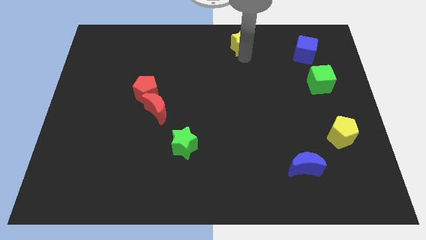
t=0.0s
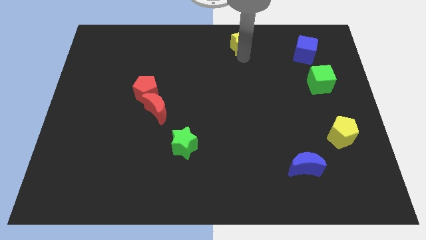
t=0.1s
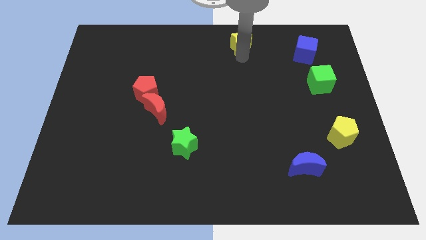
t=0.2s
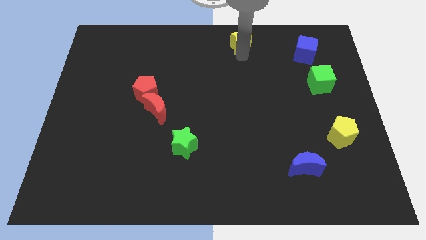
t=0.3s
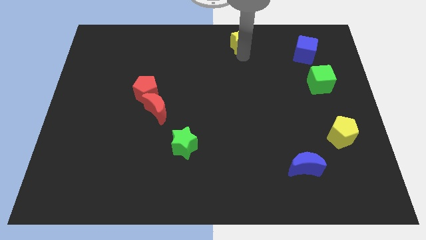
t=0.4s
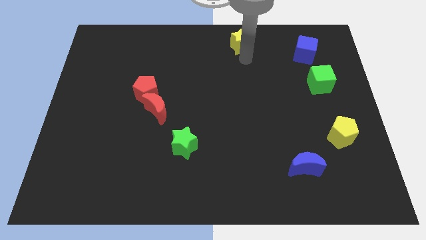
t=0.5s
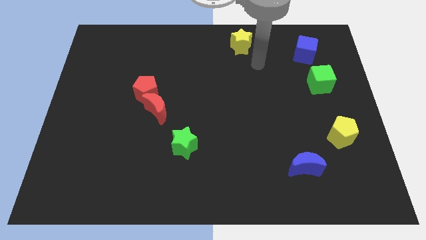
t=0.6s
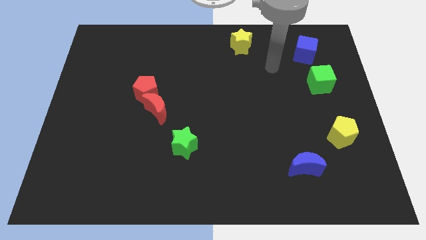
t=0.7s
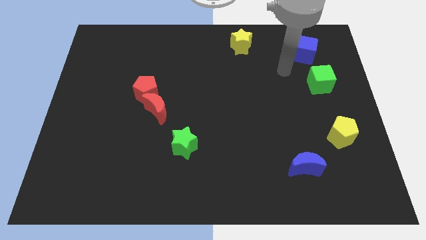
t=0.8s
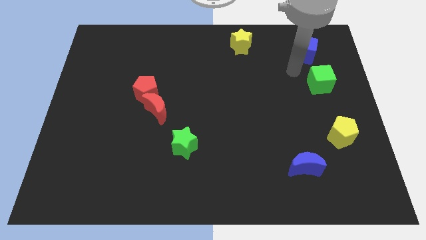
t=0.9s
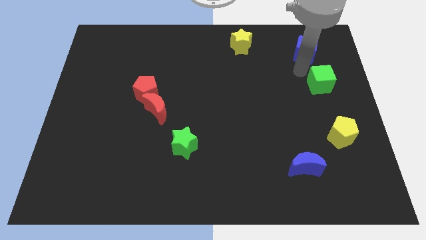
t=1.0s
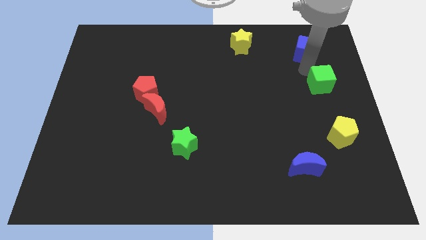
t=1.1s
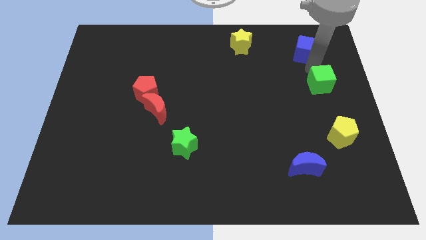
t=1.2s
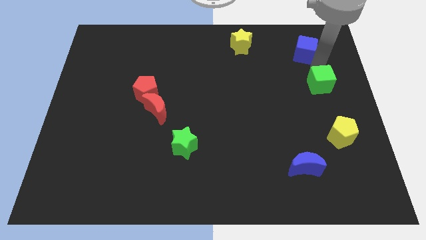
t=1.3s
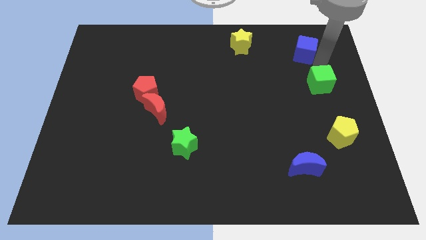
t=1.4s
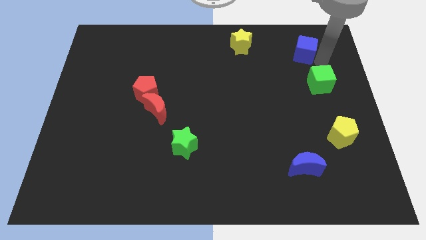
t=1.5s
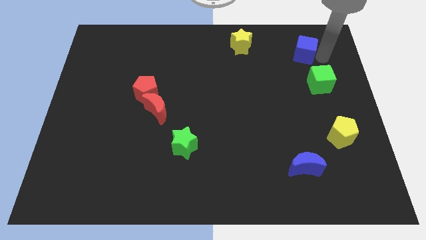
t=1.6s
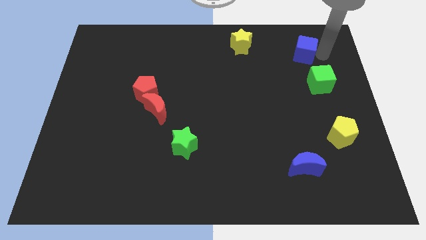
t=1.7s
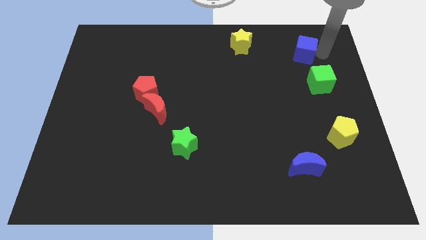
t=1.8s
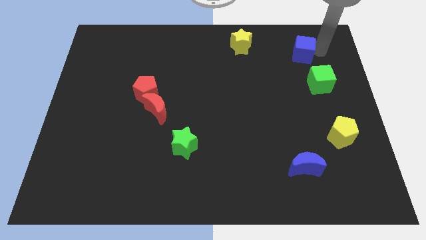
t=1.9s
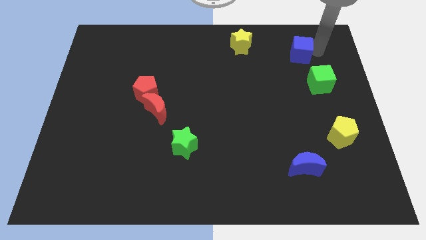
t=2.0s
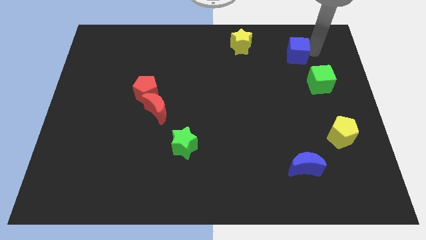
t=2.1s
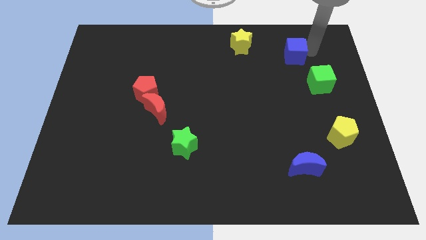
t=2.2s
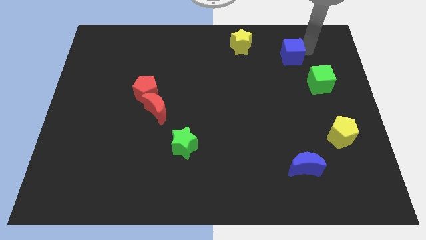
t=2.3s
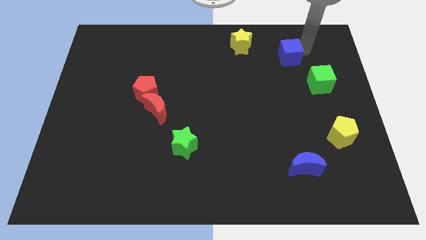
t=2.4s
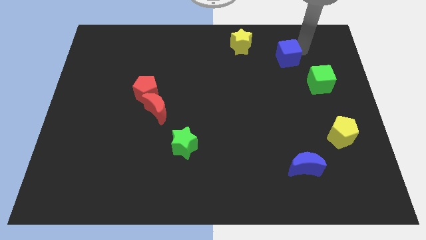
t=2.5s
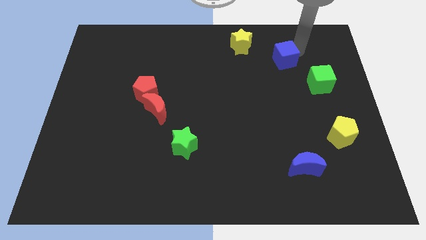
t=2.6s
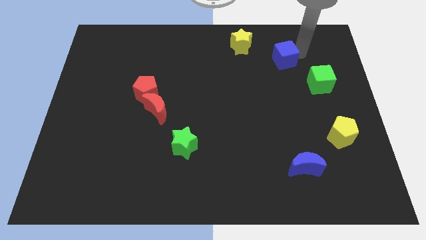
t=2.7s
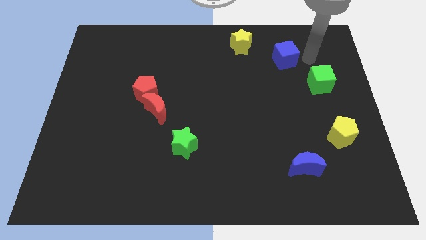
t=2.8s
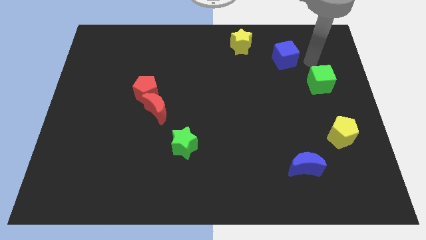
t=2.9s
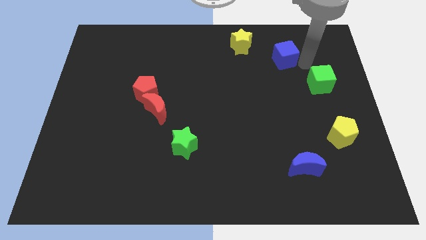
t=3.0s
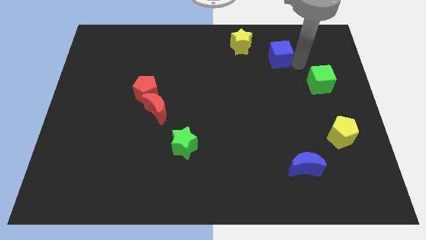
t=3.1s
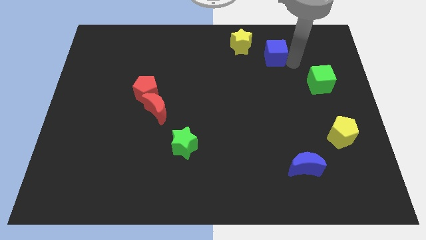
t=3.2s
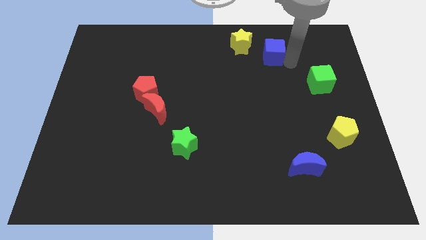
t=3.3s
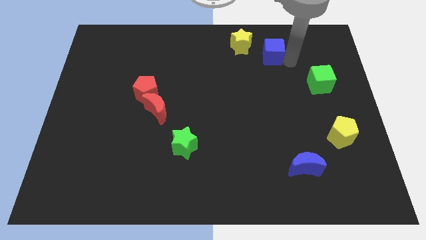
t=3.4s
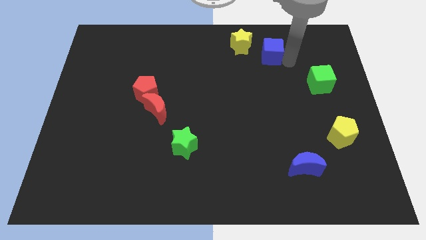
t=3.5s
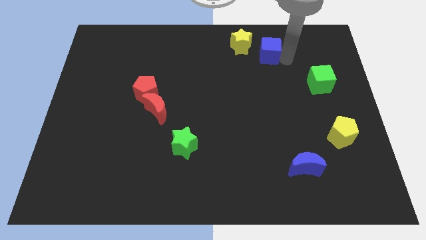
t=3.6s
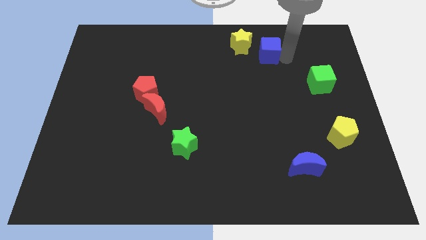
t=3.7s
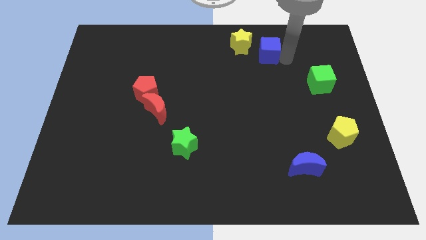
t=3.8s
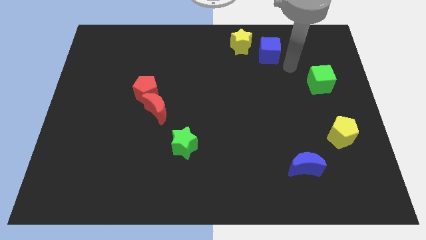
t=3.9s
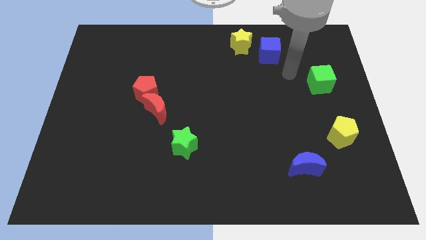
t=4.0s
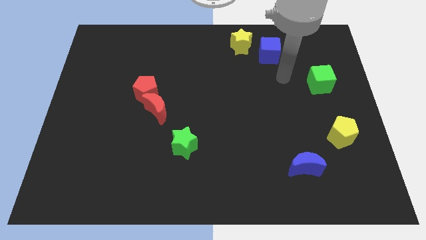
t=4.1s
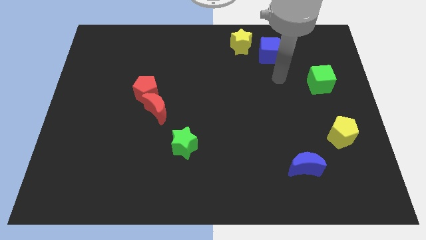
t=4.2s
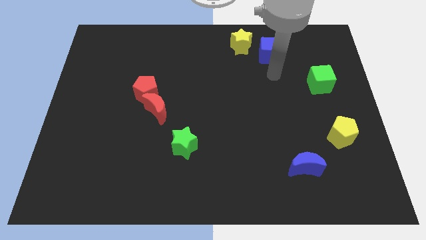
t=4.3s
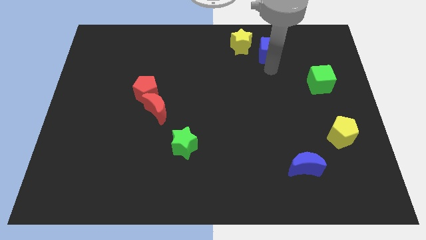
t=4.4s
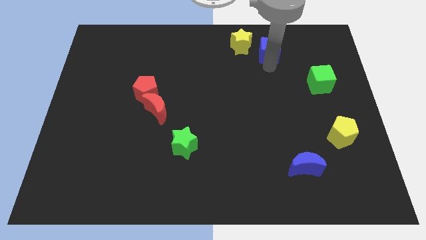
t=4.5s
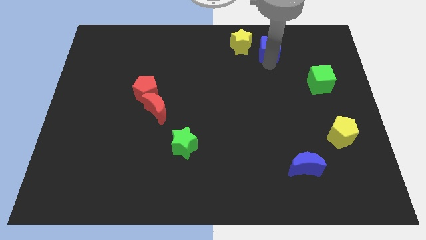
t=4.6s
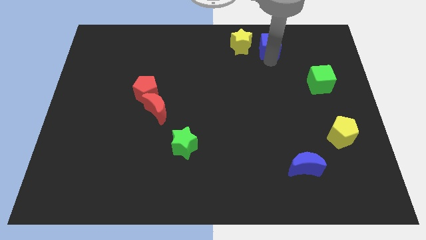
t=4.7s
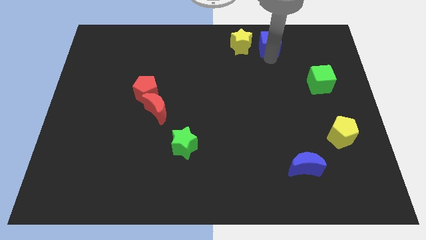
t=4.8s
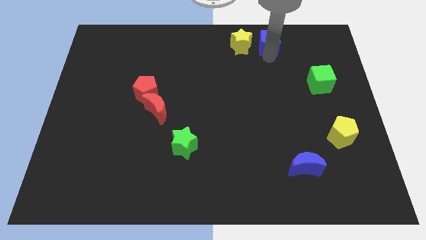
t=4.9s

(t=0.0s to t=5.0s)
move the blue cube towards the top center

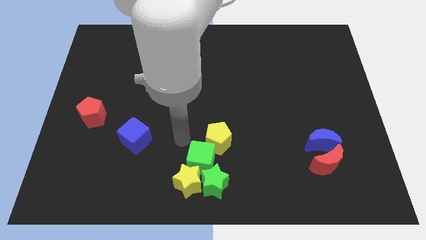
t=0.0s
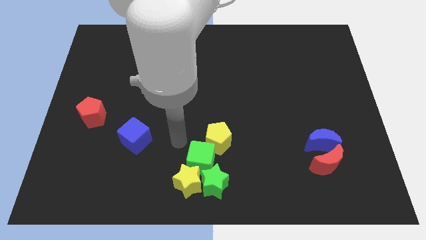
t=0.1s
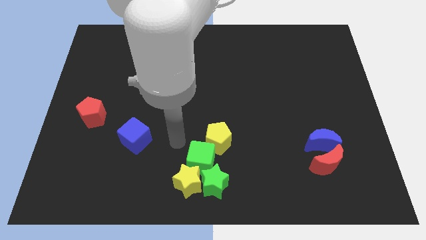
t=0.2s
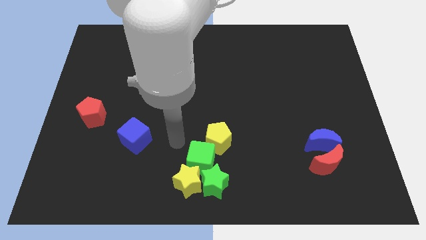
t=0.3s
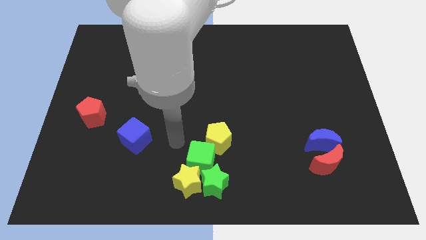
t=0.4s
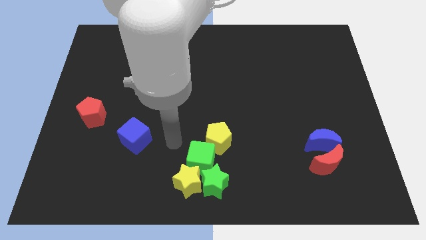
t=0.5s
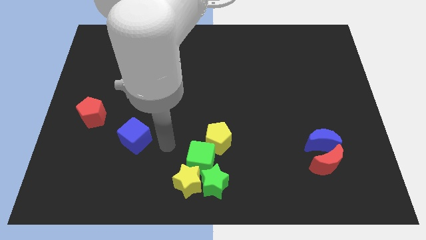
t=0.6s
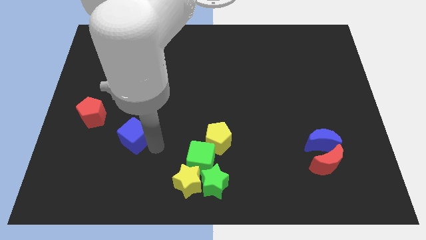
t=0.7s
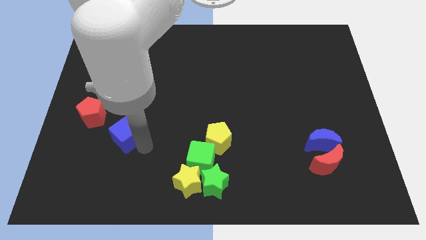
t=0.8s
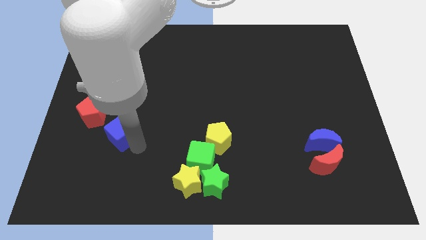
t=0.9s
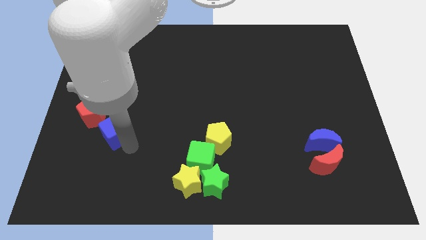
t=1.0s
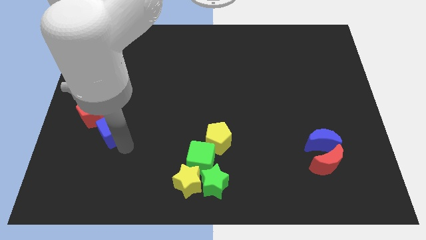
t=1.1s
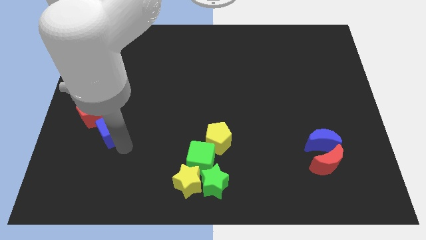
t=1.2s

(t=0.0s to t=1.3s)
move the blue cube slightly to the left

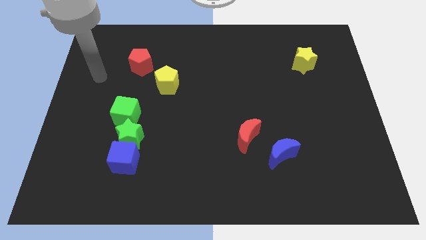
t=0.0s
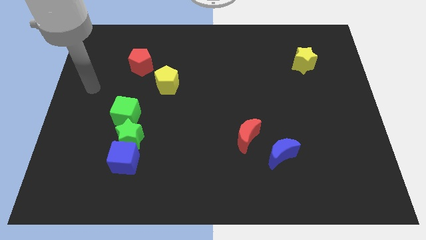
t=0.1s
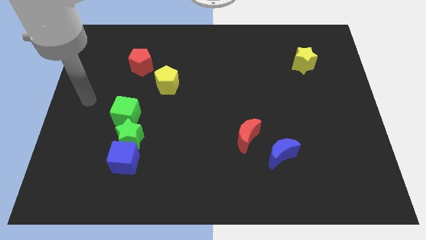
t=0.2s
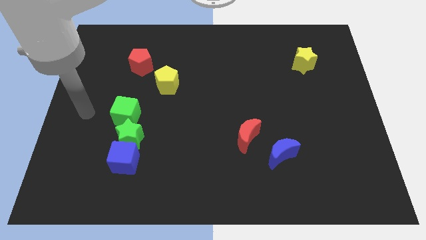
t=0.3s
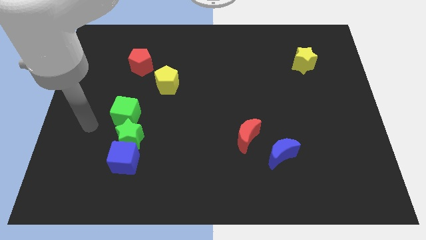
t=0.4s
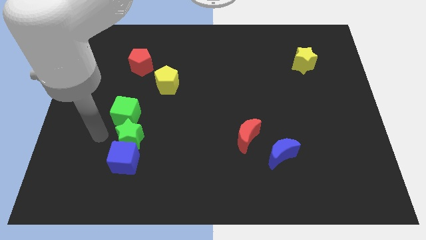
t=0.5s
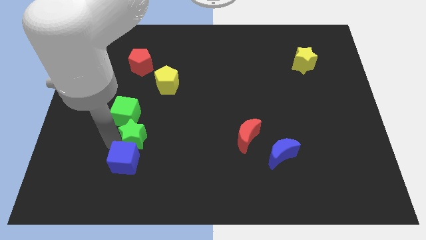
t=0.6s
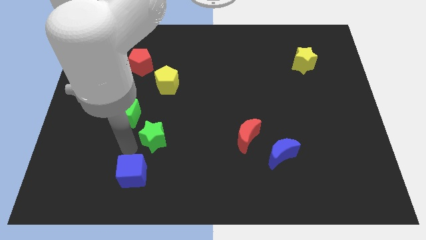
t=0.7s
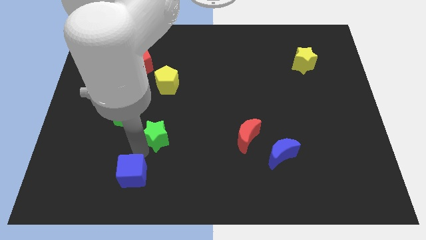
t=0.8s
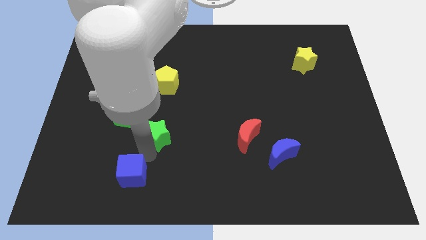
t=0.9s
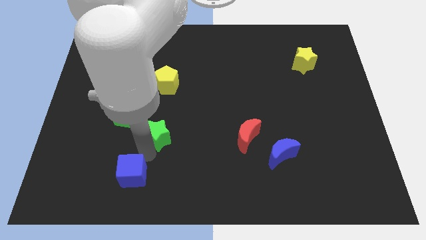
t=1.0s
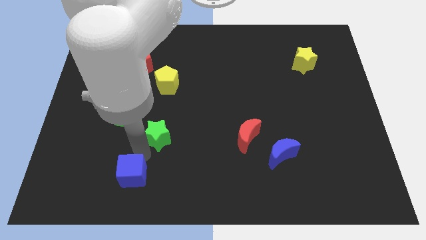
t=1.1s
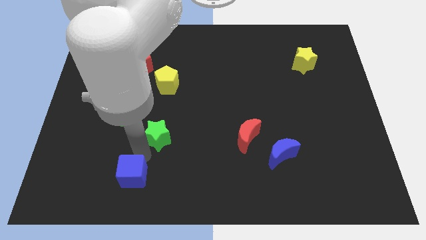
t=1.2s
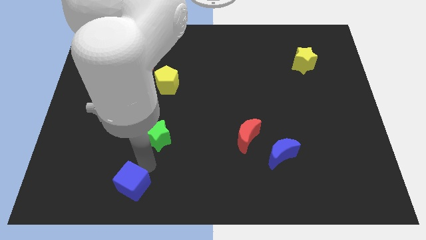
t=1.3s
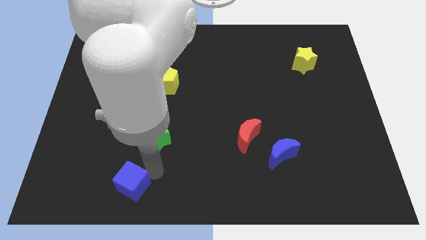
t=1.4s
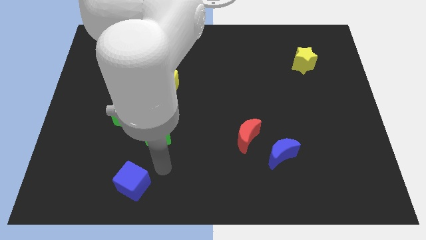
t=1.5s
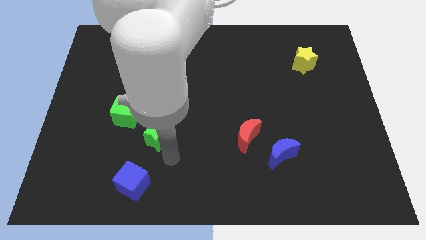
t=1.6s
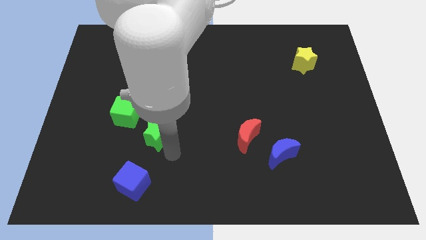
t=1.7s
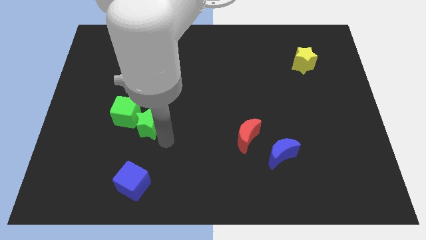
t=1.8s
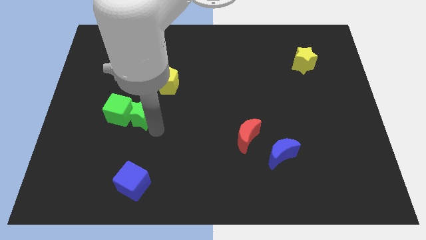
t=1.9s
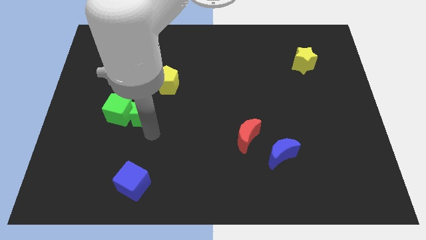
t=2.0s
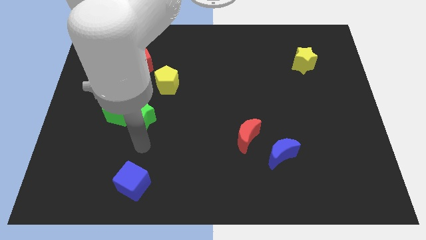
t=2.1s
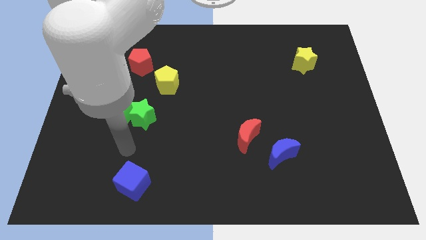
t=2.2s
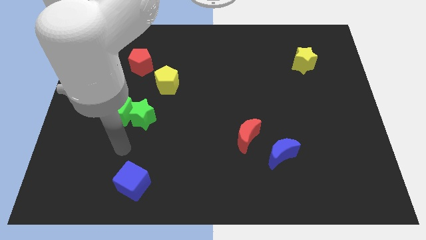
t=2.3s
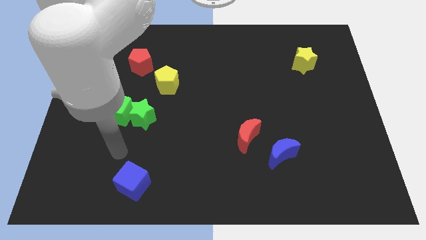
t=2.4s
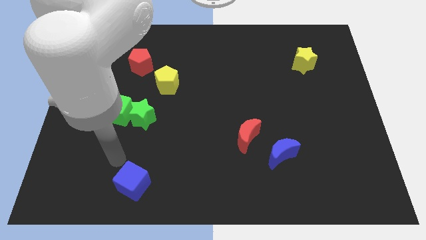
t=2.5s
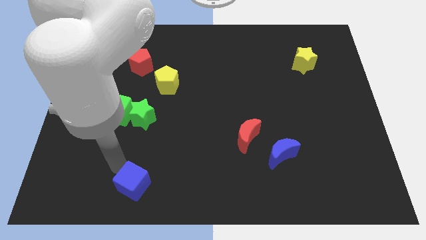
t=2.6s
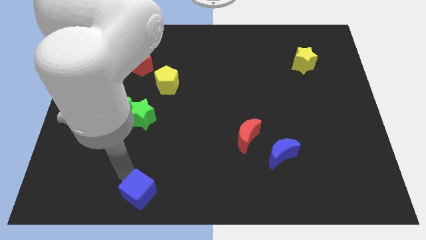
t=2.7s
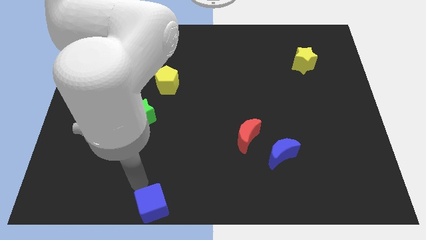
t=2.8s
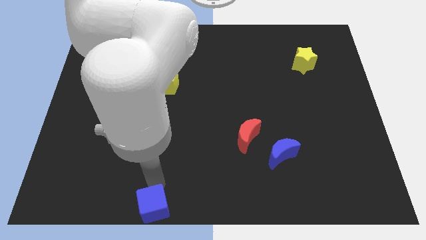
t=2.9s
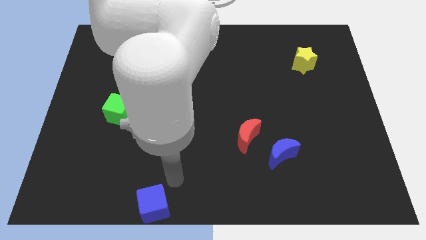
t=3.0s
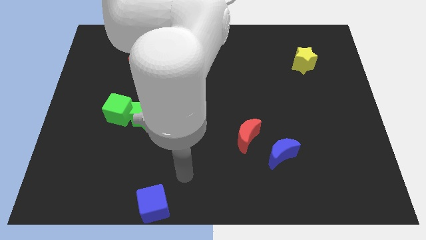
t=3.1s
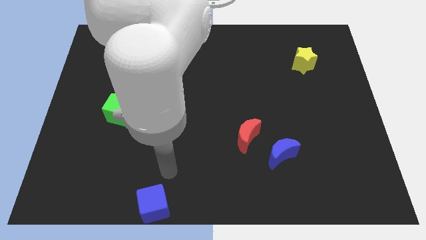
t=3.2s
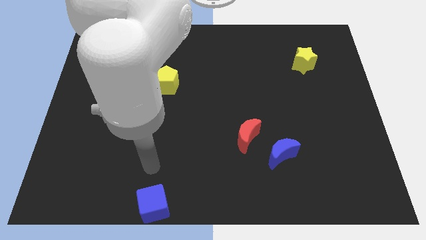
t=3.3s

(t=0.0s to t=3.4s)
separate the blue cube from the green blocks
